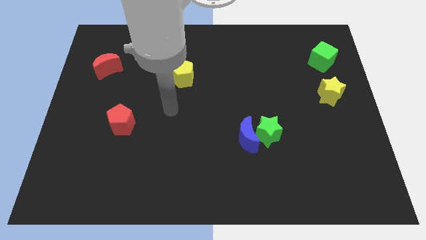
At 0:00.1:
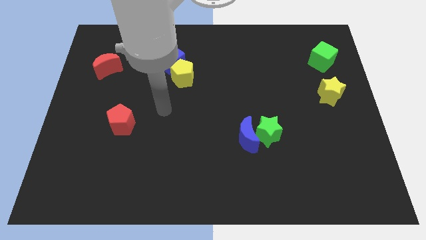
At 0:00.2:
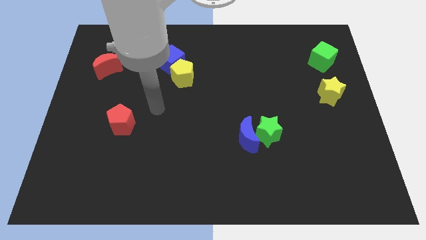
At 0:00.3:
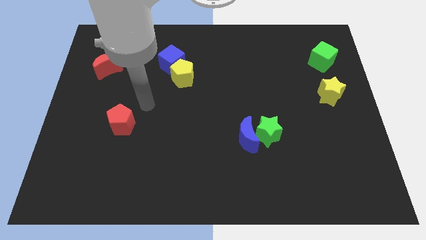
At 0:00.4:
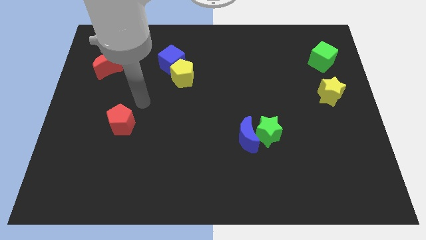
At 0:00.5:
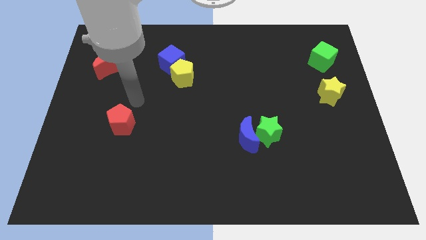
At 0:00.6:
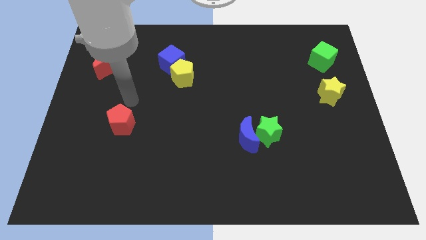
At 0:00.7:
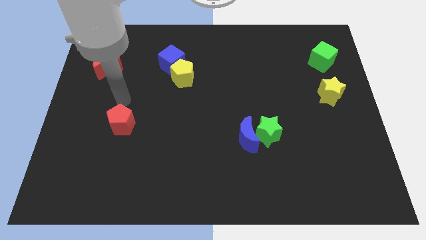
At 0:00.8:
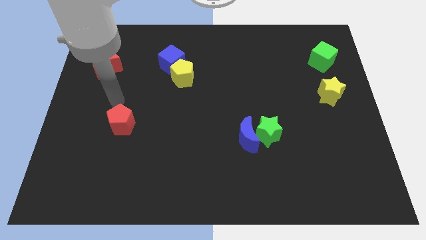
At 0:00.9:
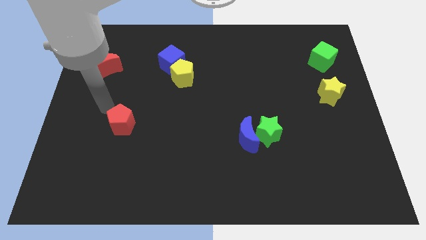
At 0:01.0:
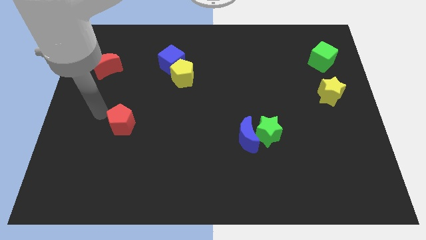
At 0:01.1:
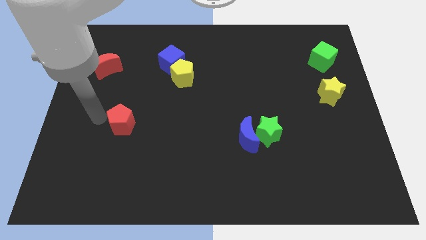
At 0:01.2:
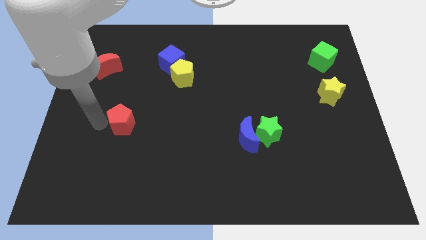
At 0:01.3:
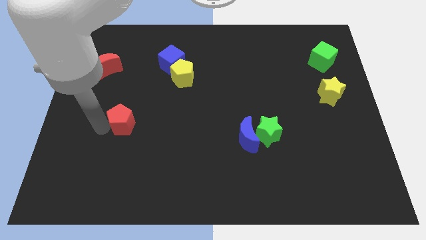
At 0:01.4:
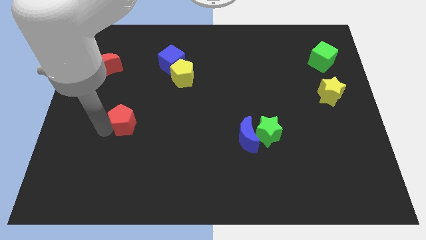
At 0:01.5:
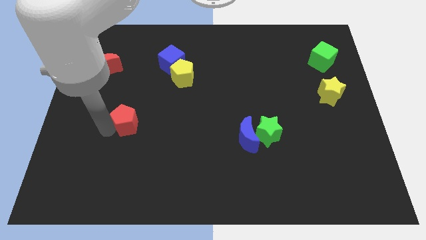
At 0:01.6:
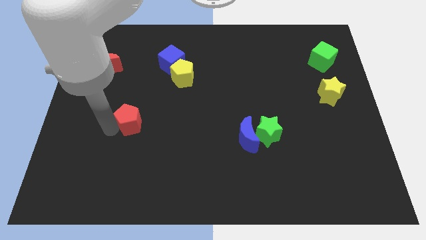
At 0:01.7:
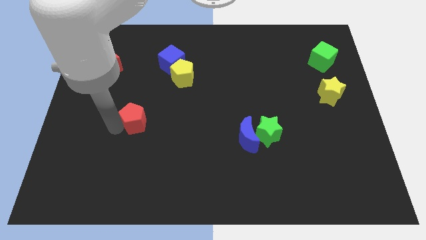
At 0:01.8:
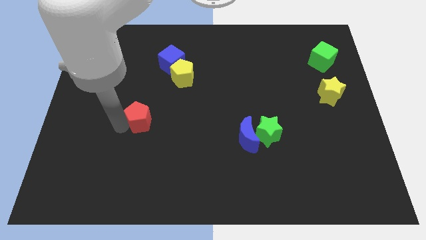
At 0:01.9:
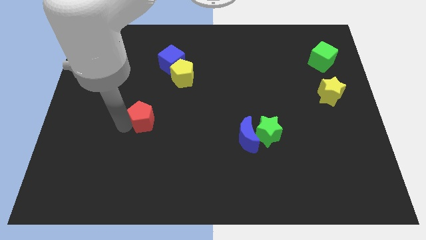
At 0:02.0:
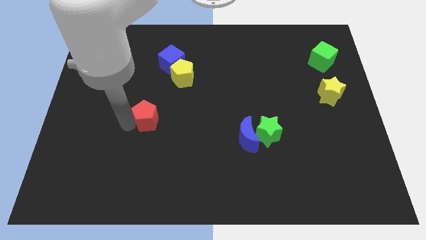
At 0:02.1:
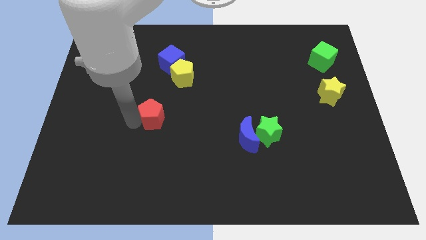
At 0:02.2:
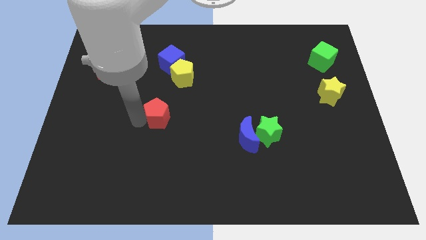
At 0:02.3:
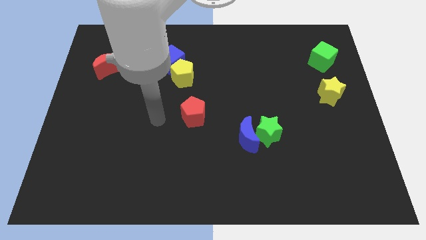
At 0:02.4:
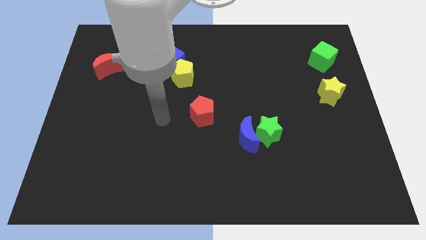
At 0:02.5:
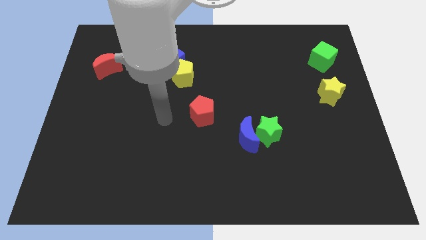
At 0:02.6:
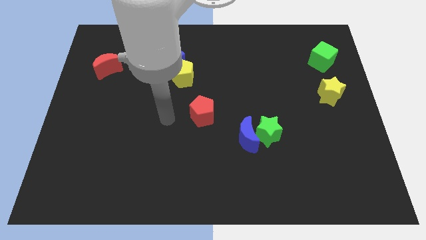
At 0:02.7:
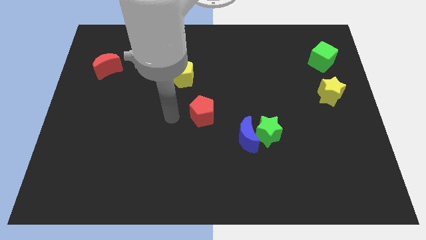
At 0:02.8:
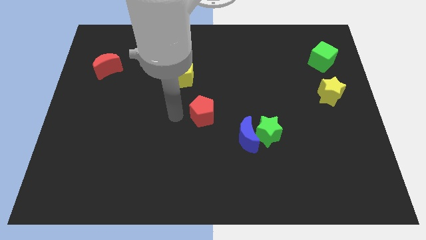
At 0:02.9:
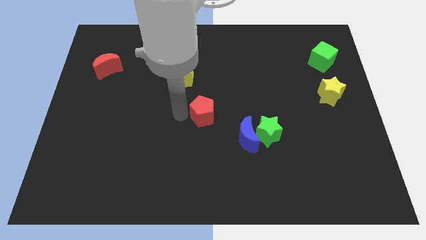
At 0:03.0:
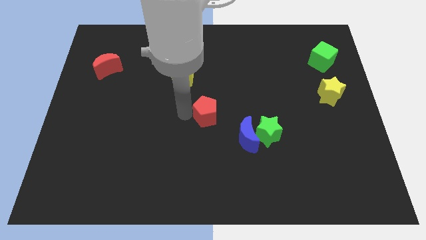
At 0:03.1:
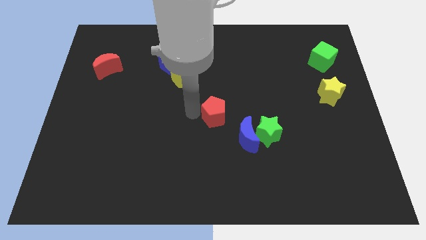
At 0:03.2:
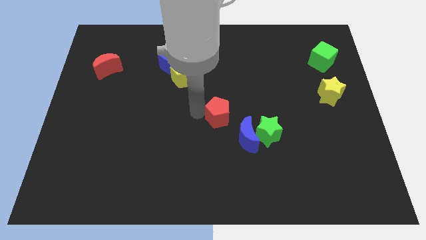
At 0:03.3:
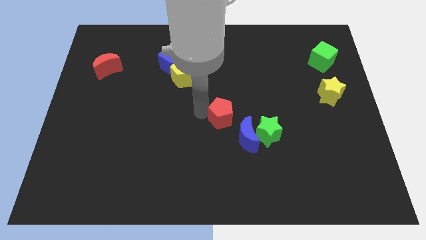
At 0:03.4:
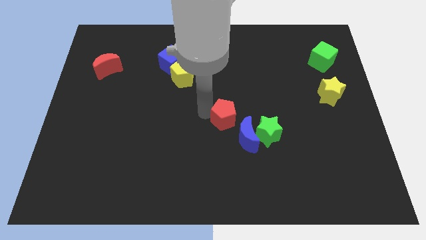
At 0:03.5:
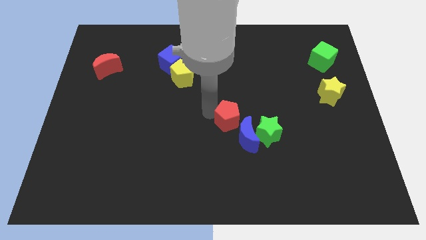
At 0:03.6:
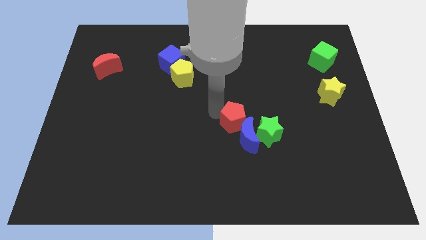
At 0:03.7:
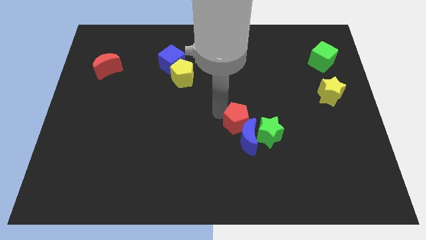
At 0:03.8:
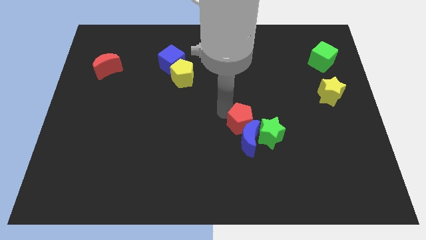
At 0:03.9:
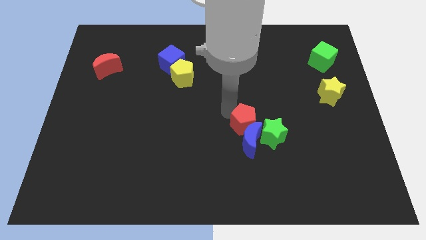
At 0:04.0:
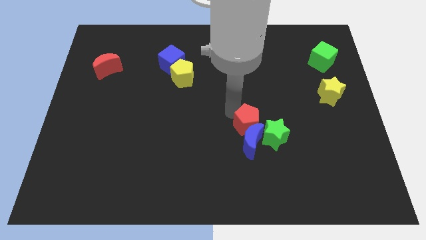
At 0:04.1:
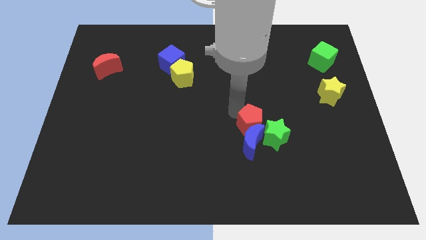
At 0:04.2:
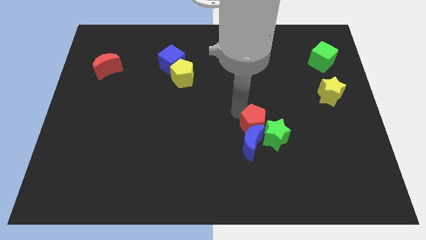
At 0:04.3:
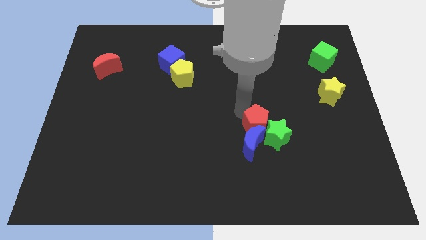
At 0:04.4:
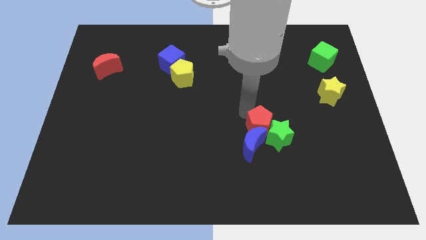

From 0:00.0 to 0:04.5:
put the red pentagon close to the green star

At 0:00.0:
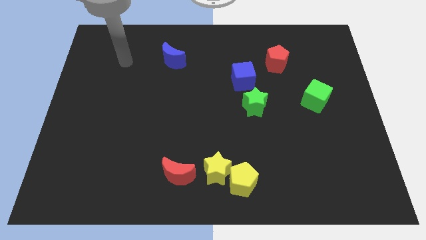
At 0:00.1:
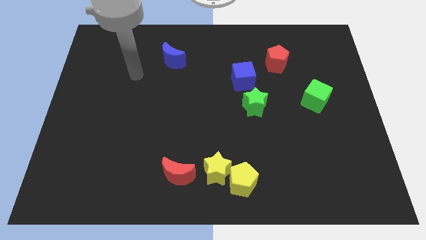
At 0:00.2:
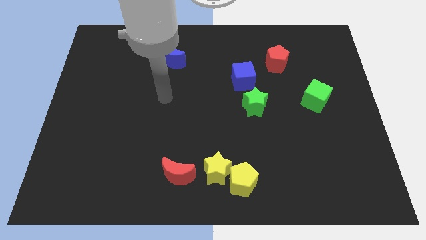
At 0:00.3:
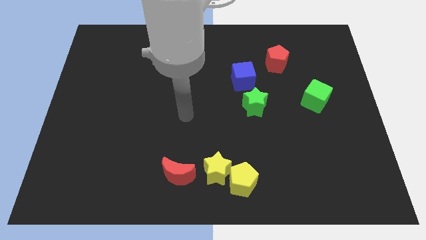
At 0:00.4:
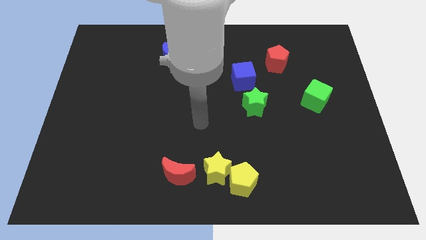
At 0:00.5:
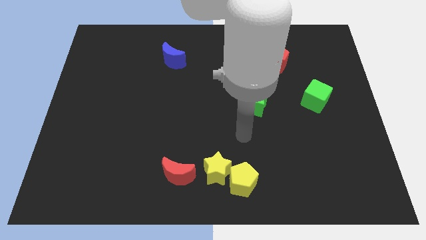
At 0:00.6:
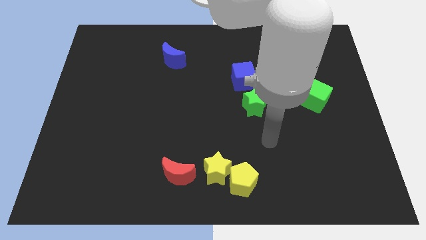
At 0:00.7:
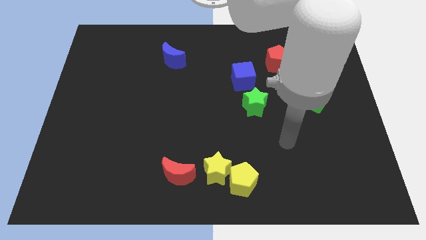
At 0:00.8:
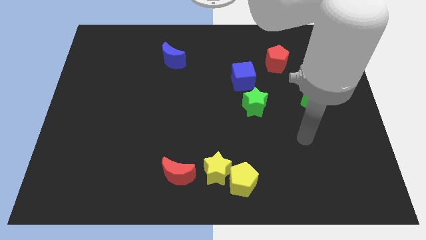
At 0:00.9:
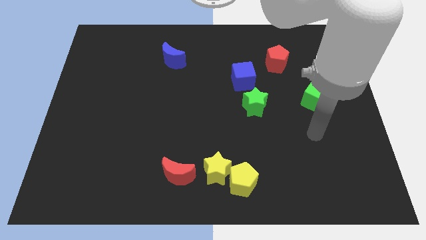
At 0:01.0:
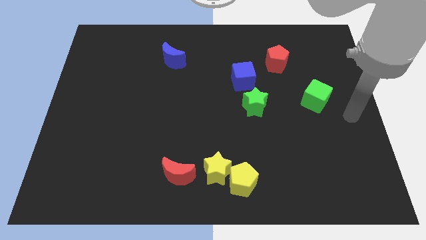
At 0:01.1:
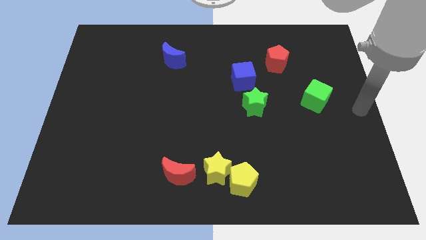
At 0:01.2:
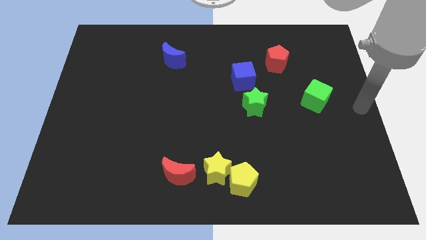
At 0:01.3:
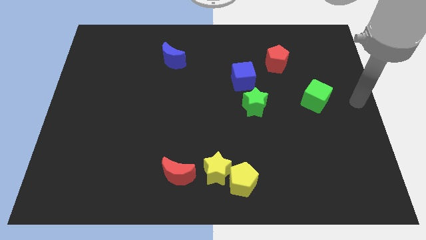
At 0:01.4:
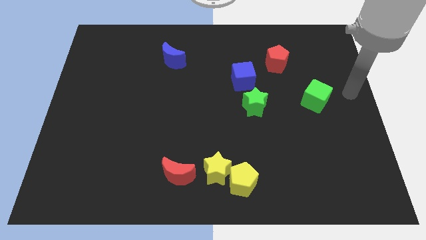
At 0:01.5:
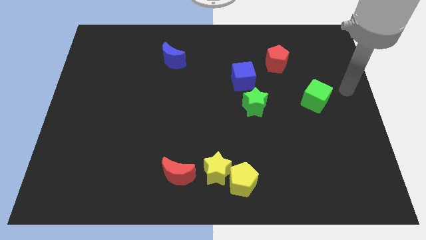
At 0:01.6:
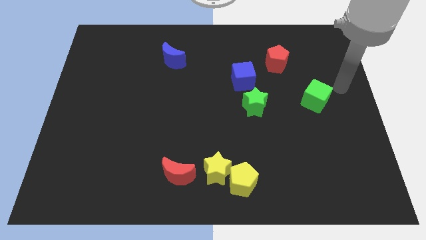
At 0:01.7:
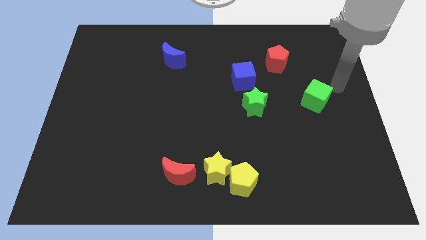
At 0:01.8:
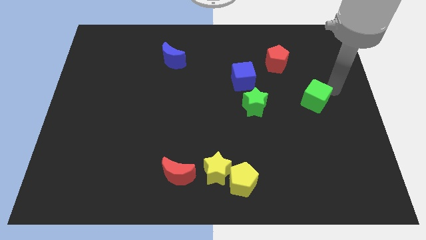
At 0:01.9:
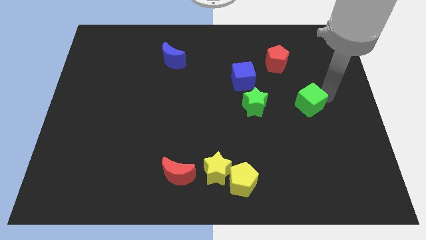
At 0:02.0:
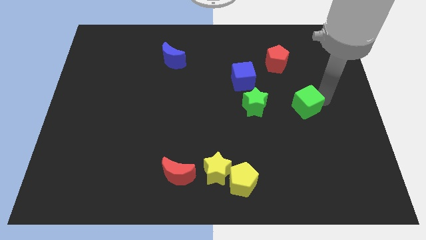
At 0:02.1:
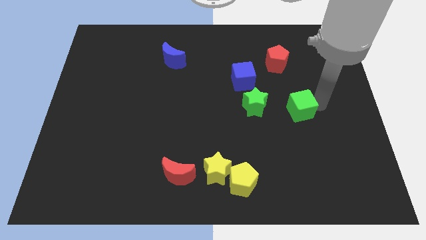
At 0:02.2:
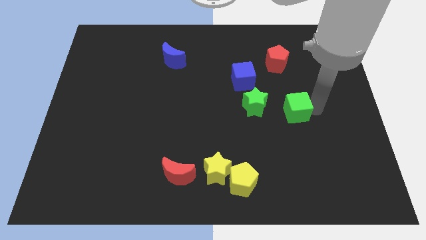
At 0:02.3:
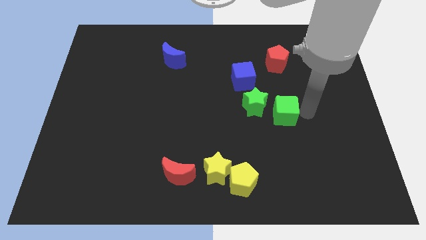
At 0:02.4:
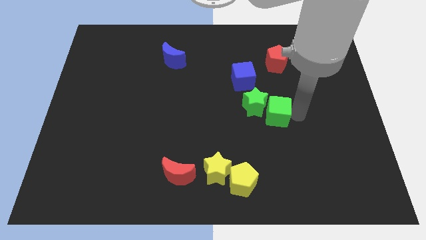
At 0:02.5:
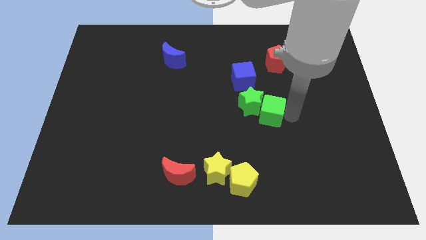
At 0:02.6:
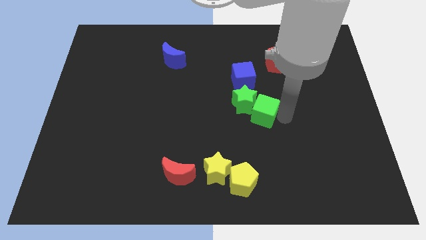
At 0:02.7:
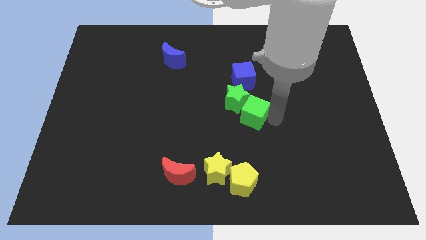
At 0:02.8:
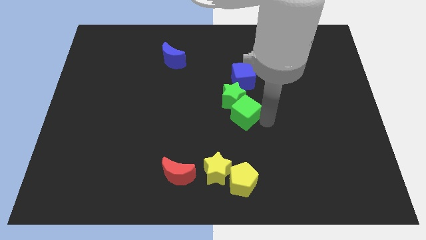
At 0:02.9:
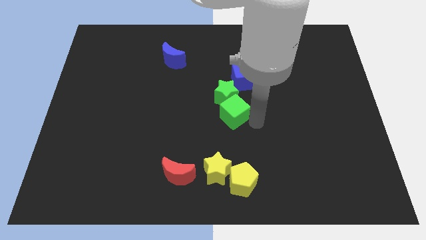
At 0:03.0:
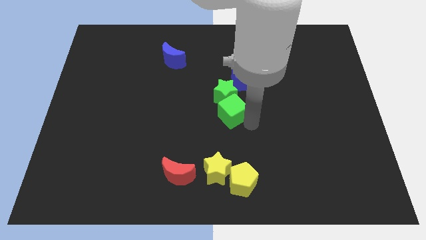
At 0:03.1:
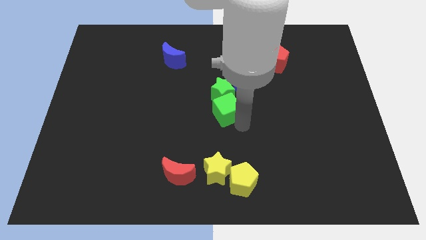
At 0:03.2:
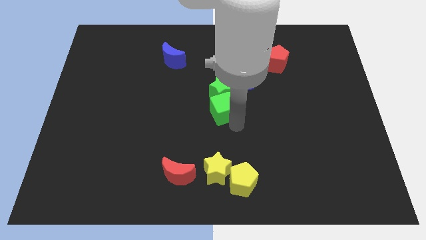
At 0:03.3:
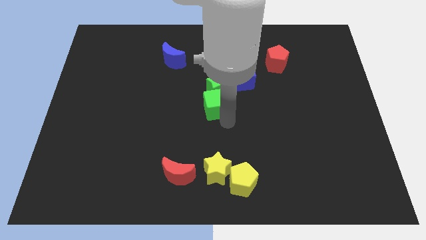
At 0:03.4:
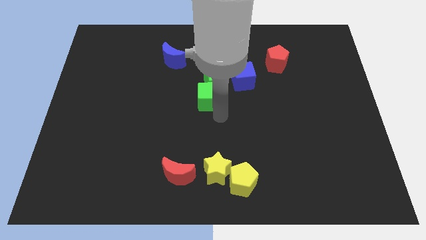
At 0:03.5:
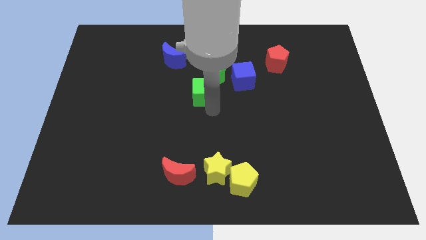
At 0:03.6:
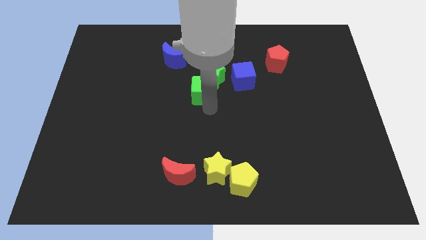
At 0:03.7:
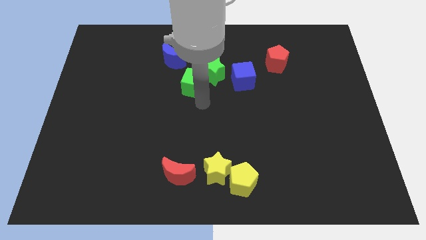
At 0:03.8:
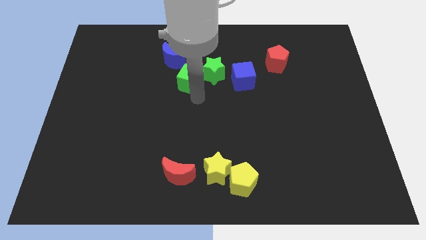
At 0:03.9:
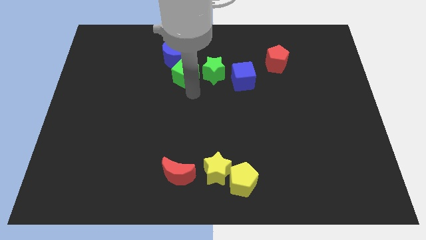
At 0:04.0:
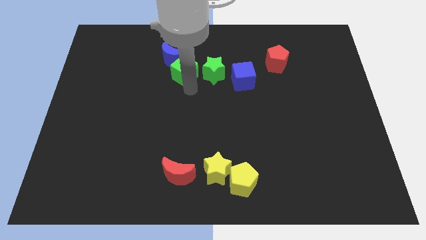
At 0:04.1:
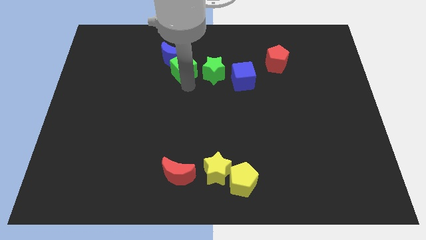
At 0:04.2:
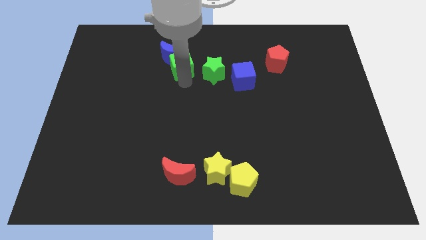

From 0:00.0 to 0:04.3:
push the green cube next to the blue moon
